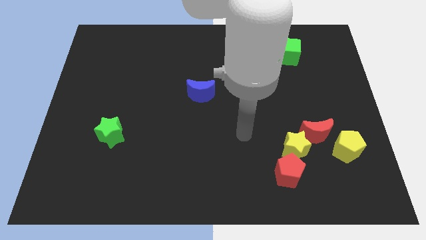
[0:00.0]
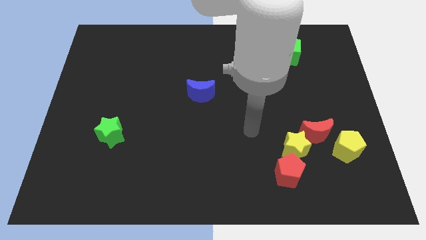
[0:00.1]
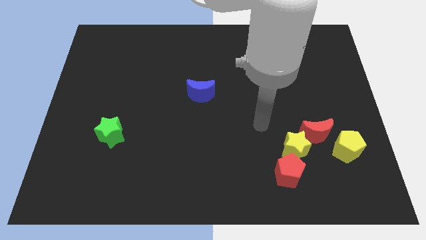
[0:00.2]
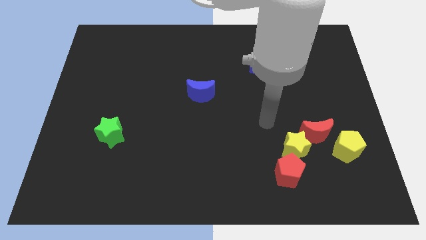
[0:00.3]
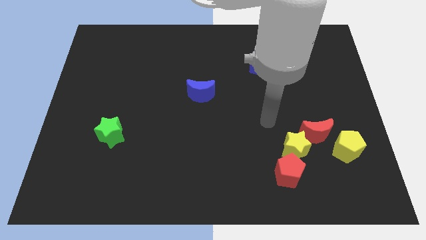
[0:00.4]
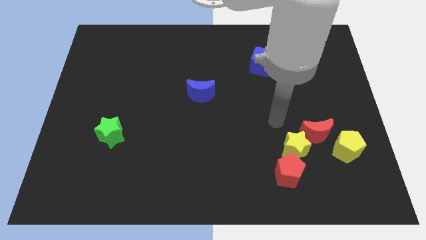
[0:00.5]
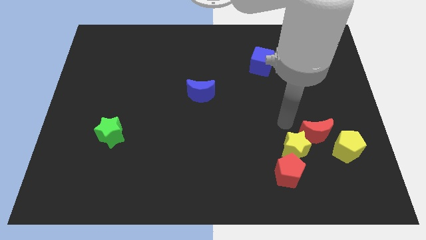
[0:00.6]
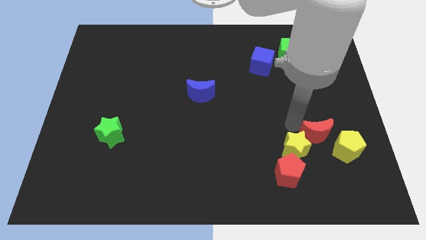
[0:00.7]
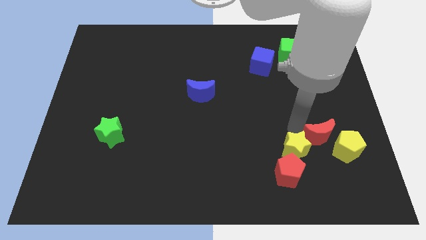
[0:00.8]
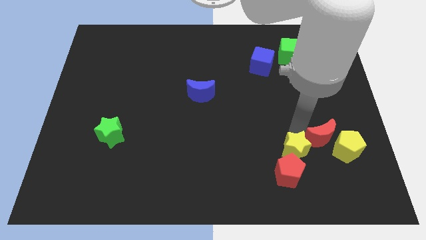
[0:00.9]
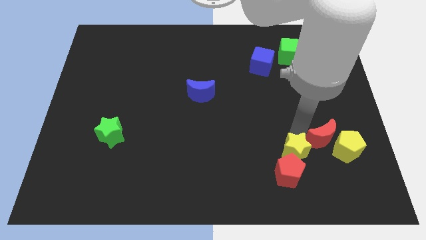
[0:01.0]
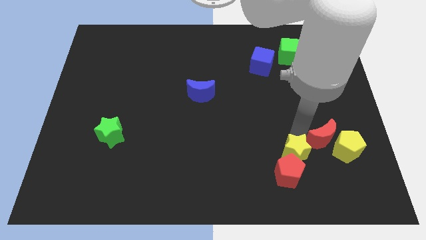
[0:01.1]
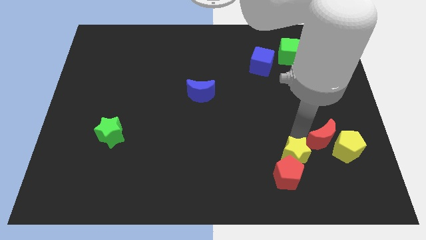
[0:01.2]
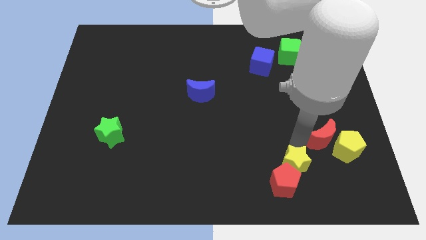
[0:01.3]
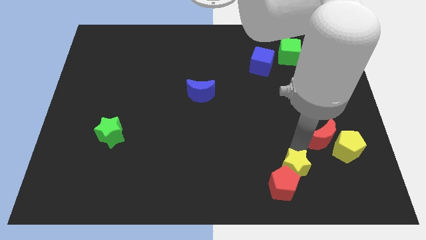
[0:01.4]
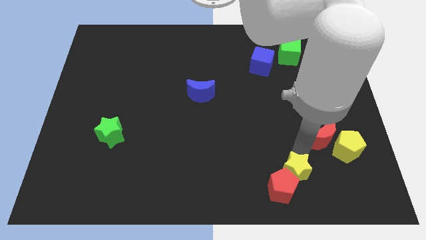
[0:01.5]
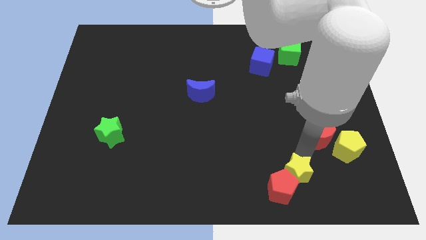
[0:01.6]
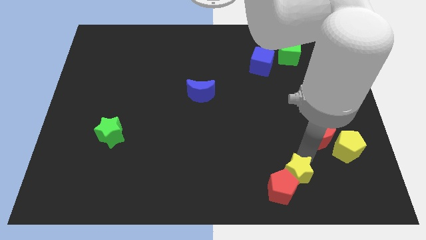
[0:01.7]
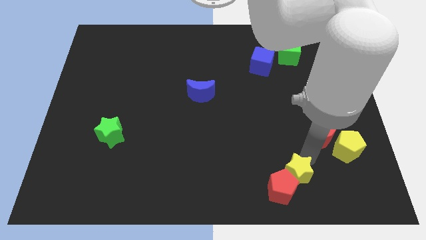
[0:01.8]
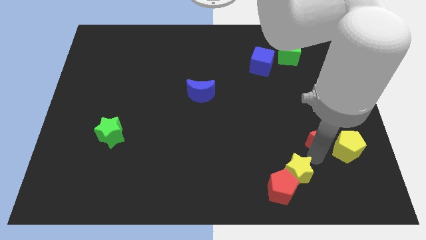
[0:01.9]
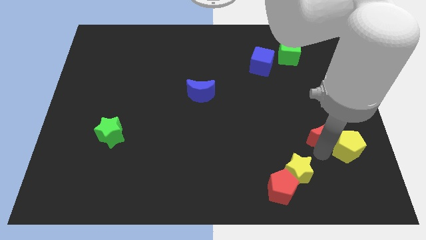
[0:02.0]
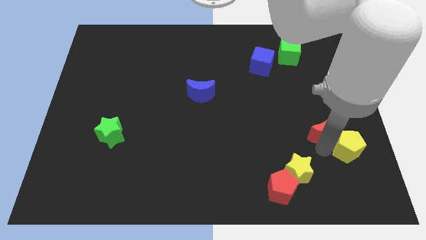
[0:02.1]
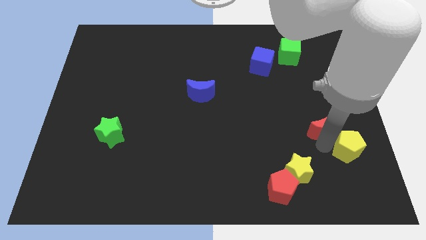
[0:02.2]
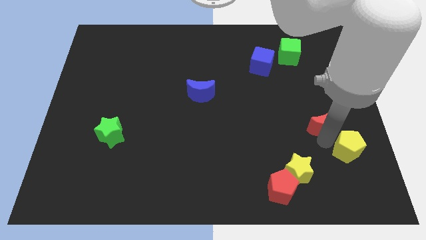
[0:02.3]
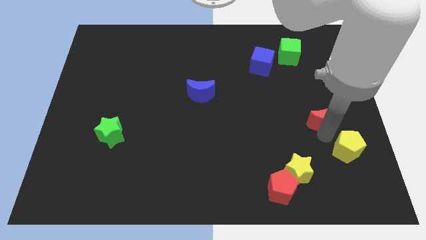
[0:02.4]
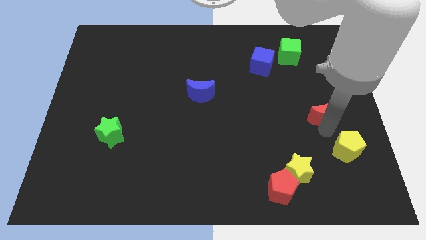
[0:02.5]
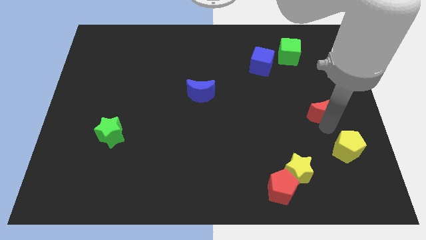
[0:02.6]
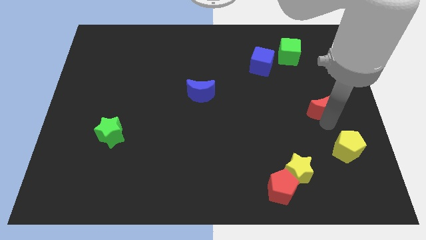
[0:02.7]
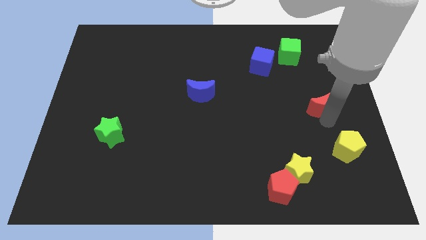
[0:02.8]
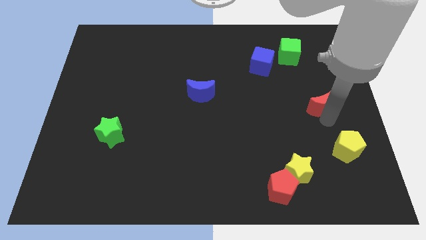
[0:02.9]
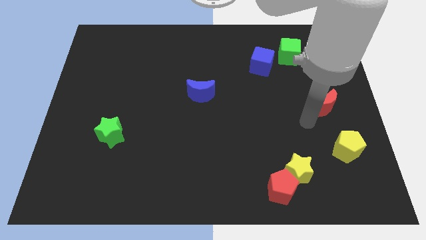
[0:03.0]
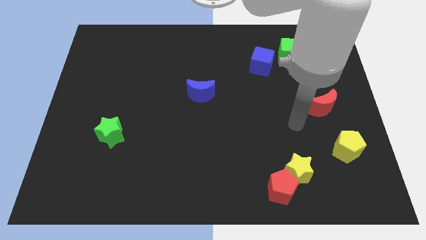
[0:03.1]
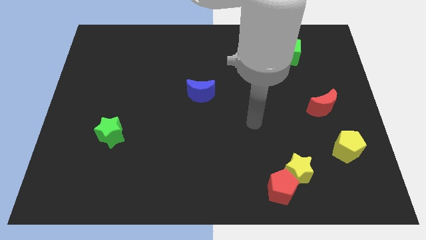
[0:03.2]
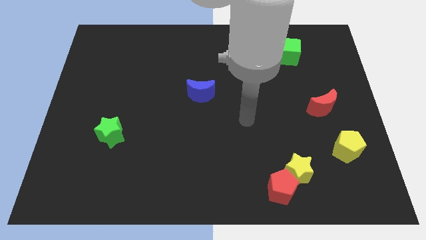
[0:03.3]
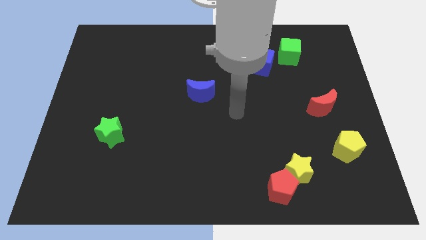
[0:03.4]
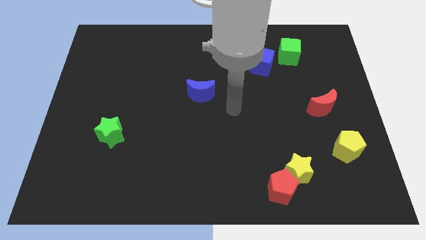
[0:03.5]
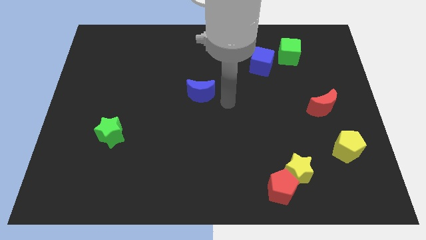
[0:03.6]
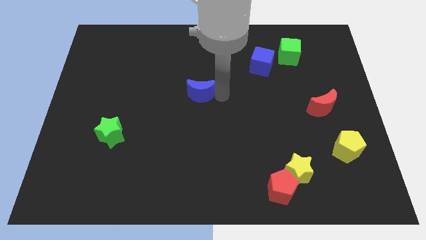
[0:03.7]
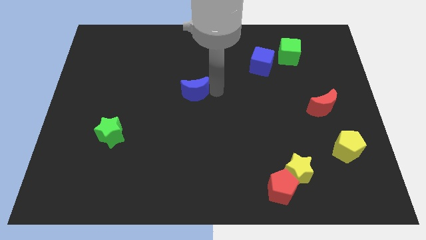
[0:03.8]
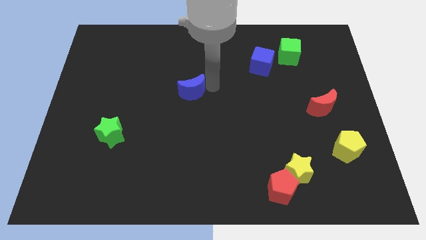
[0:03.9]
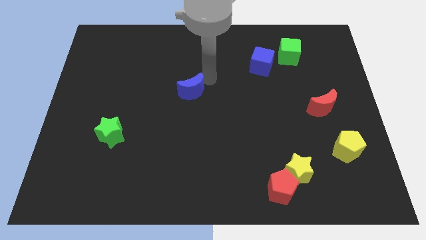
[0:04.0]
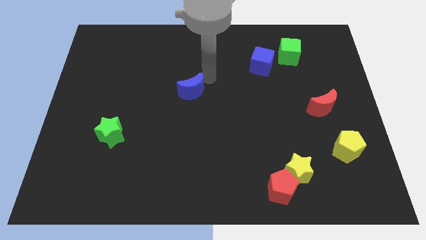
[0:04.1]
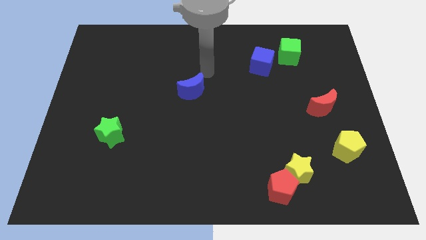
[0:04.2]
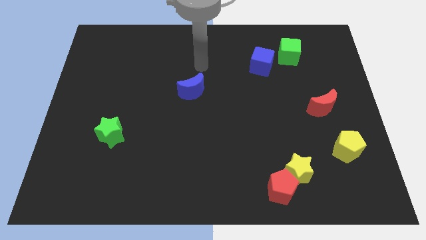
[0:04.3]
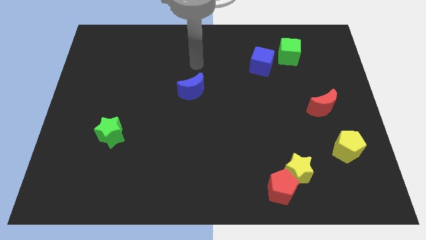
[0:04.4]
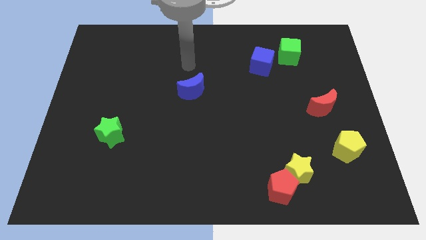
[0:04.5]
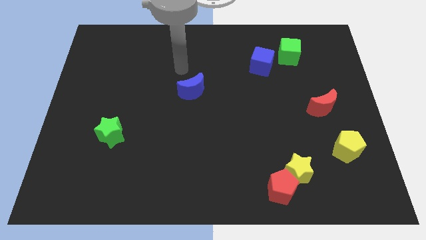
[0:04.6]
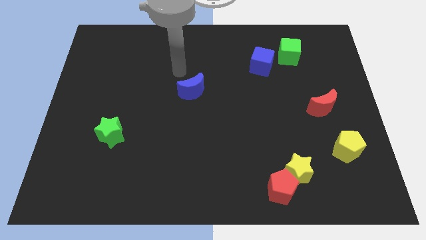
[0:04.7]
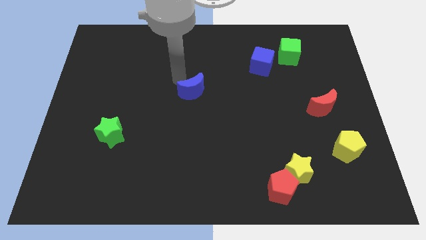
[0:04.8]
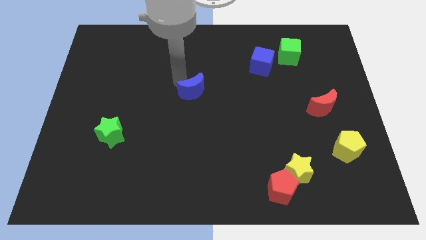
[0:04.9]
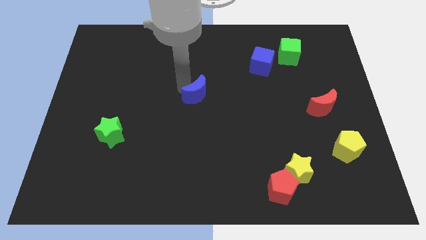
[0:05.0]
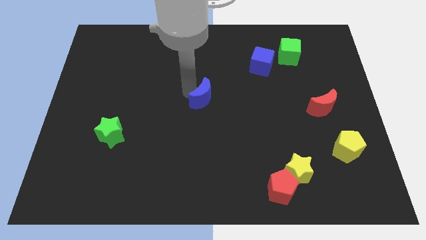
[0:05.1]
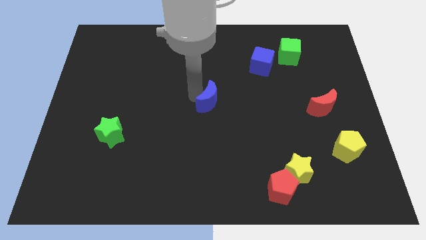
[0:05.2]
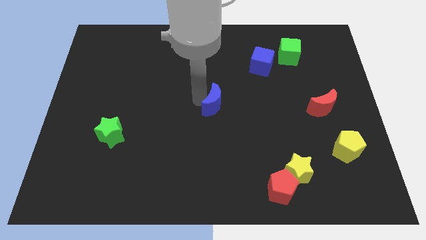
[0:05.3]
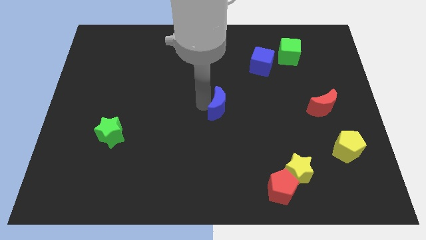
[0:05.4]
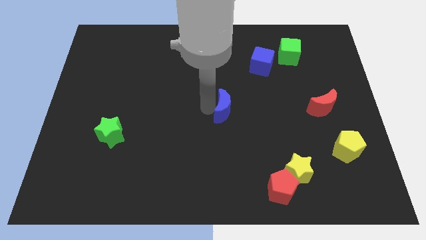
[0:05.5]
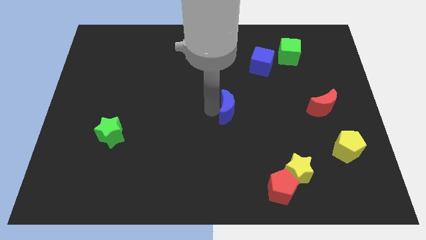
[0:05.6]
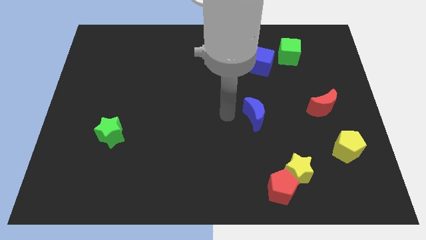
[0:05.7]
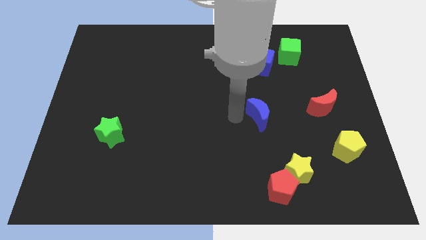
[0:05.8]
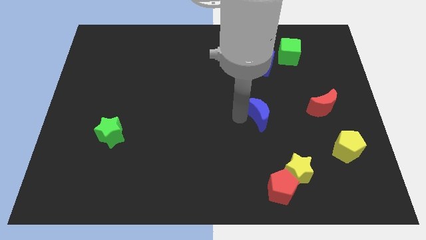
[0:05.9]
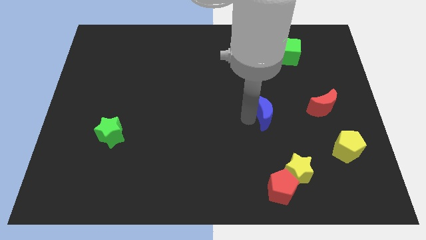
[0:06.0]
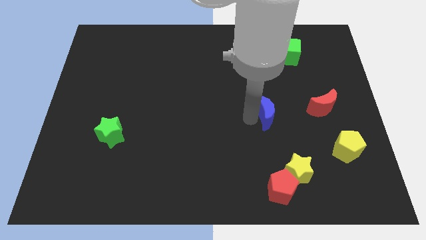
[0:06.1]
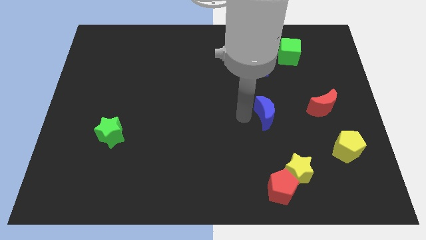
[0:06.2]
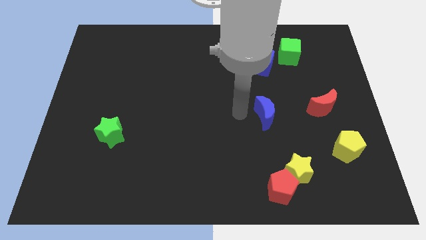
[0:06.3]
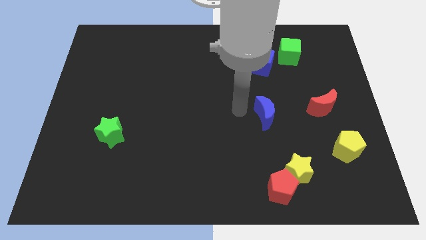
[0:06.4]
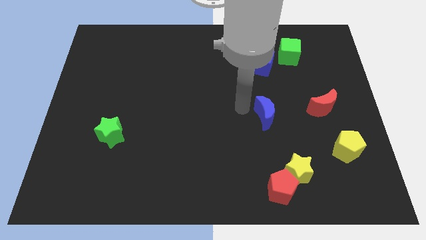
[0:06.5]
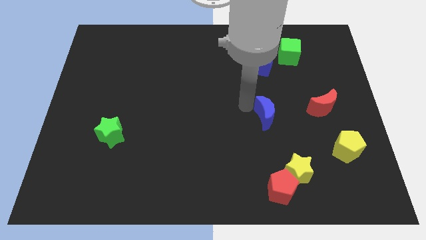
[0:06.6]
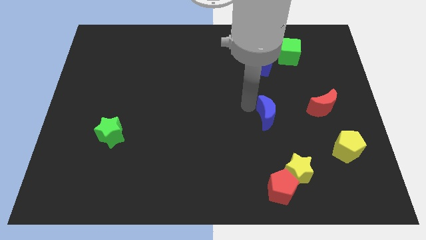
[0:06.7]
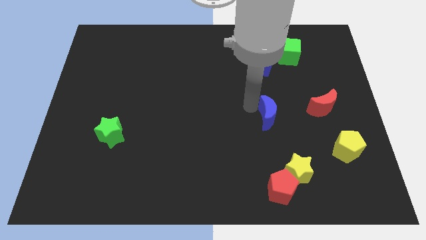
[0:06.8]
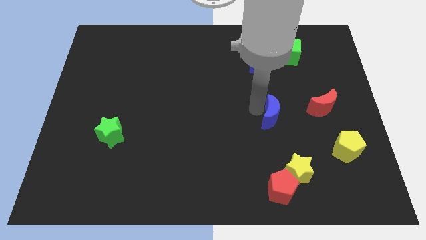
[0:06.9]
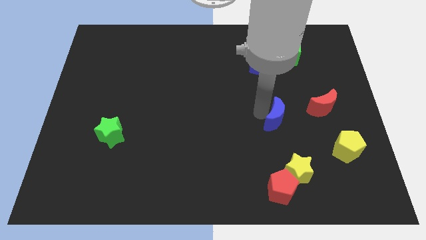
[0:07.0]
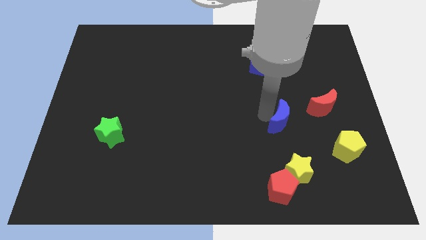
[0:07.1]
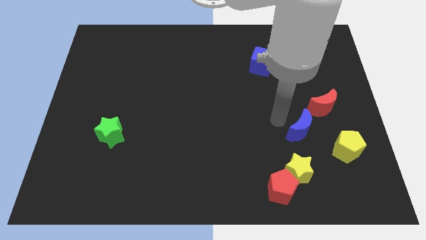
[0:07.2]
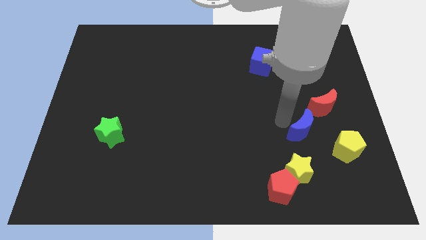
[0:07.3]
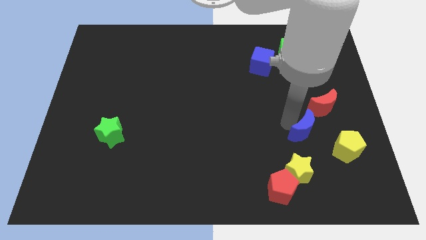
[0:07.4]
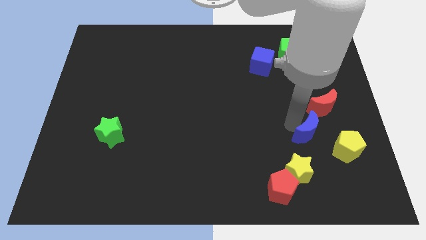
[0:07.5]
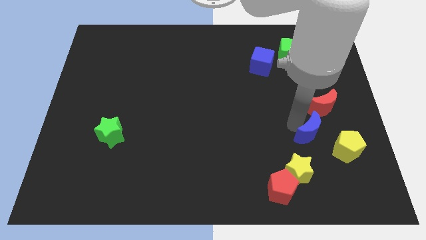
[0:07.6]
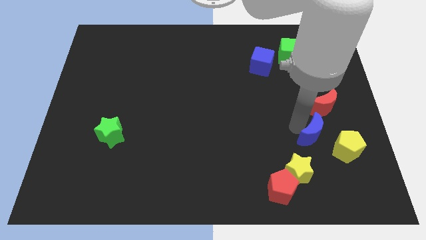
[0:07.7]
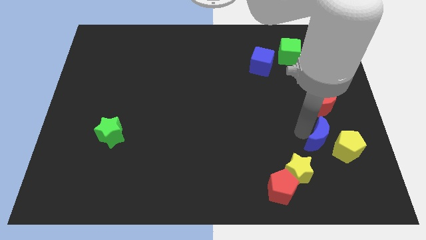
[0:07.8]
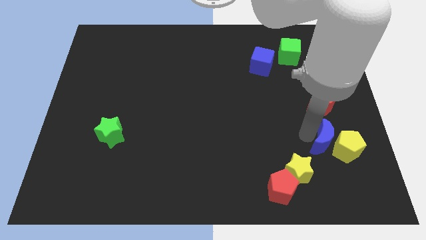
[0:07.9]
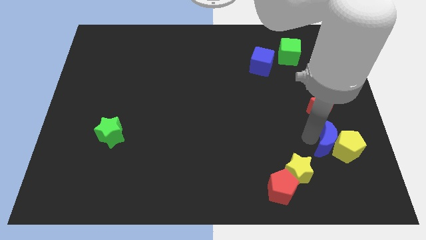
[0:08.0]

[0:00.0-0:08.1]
move the blue moon close to the yellow pentagon

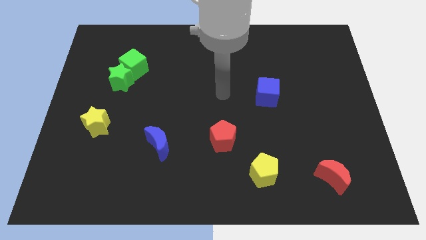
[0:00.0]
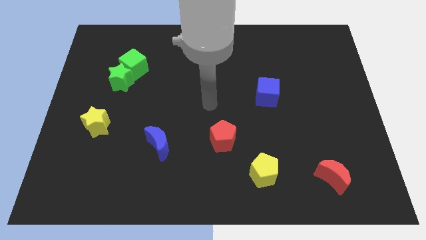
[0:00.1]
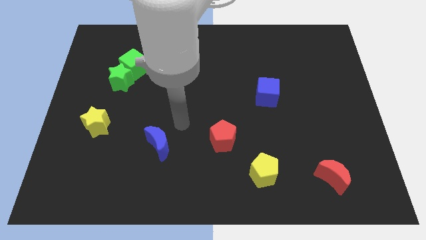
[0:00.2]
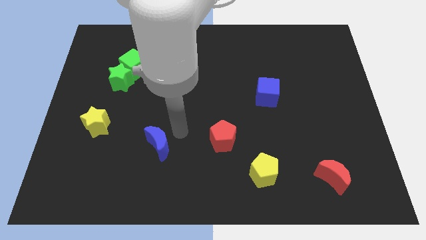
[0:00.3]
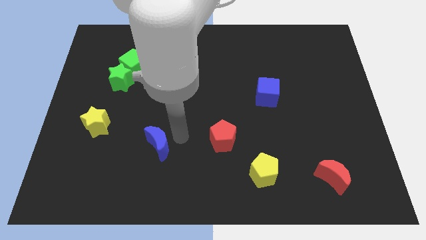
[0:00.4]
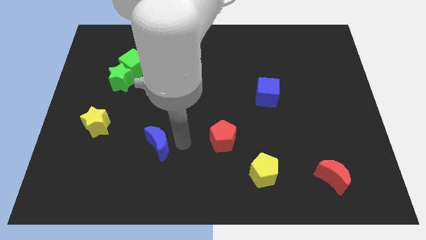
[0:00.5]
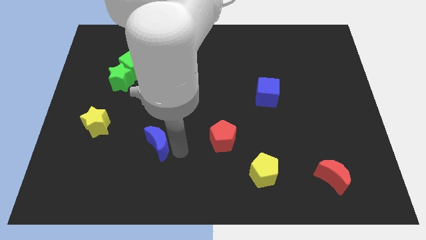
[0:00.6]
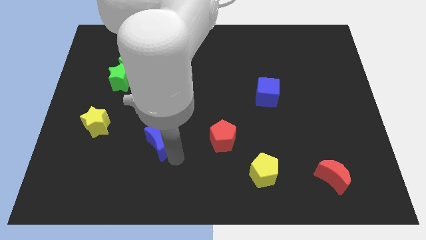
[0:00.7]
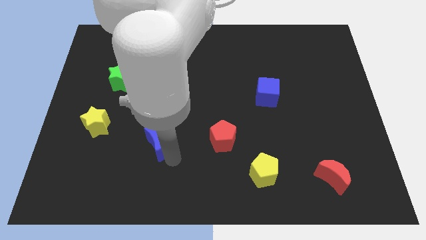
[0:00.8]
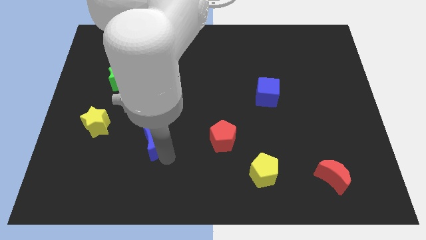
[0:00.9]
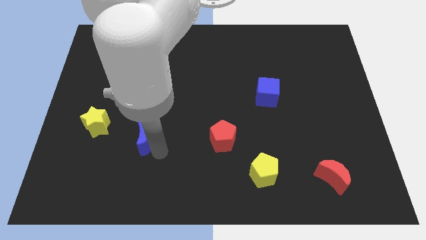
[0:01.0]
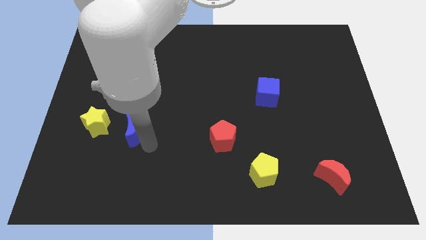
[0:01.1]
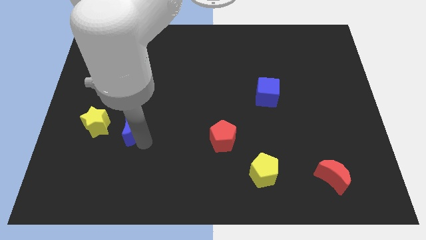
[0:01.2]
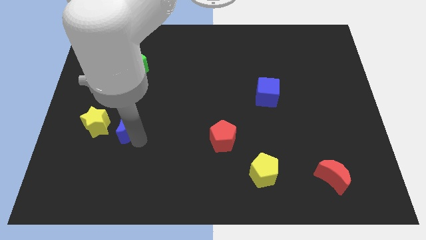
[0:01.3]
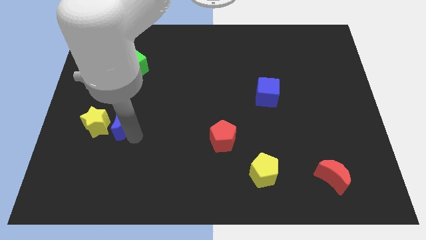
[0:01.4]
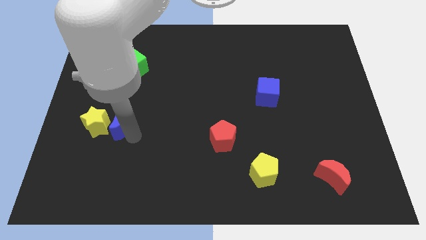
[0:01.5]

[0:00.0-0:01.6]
move the blue moon towards the yellow star
